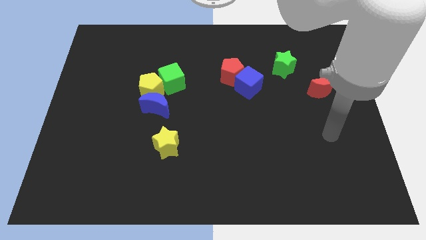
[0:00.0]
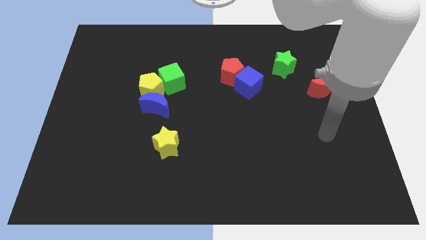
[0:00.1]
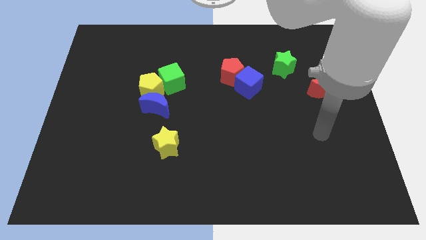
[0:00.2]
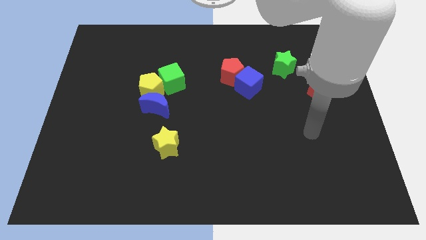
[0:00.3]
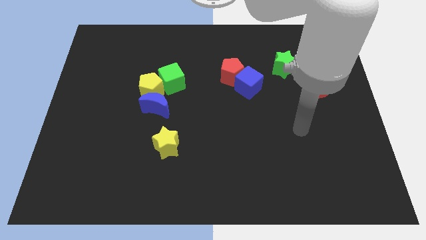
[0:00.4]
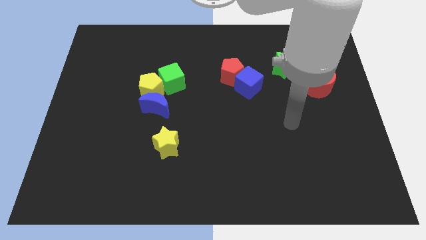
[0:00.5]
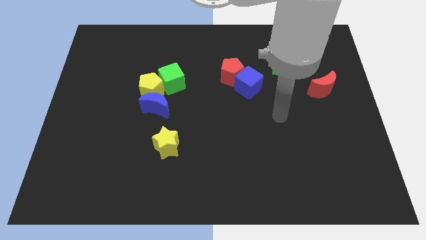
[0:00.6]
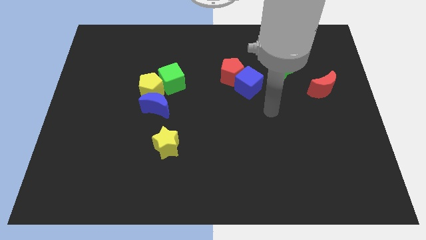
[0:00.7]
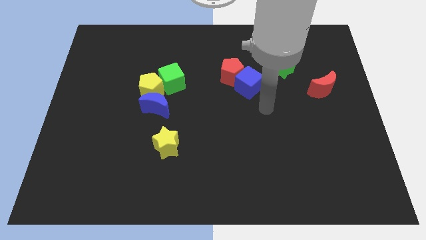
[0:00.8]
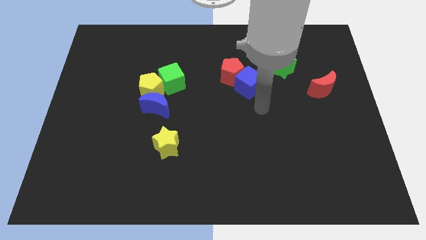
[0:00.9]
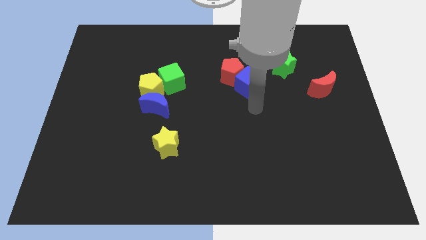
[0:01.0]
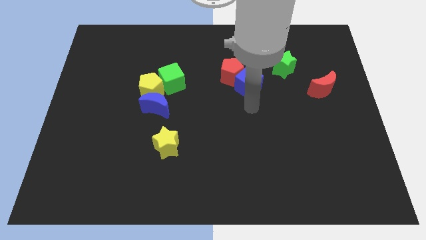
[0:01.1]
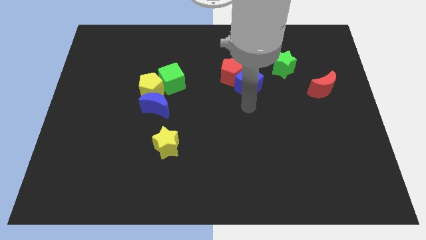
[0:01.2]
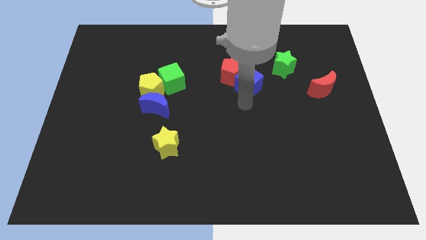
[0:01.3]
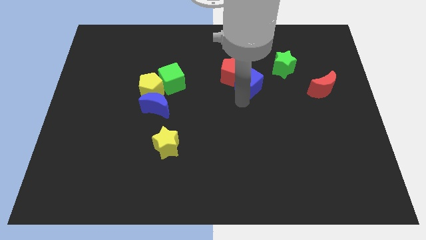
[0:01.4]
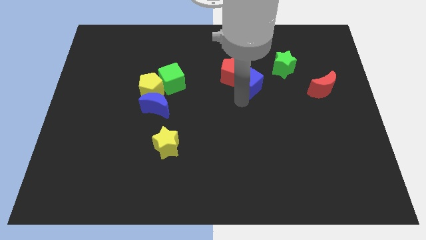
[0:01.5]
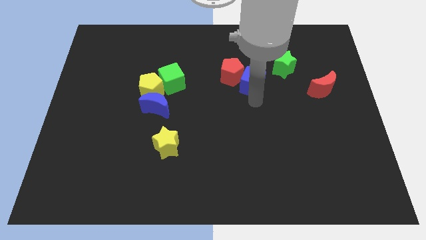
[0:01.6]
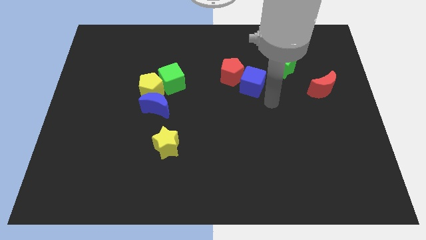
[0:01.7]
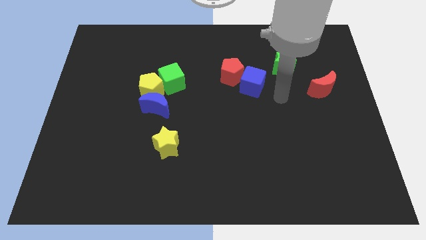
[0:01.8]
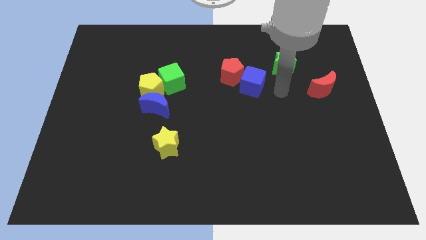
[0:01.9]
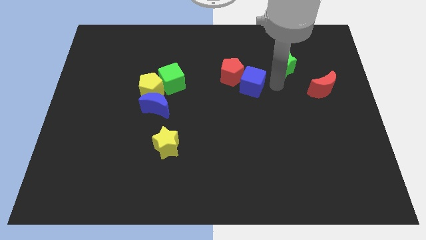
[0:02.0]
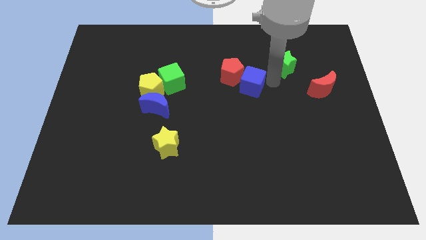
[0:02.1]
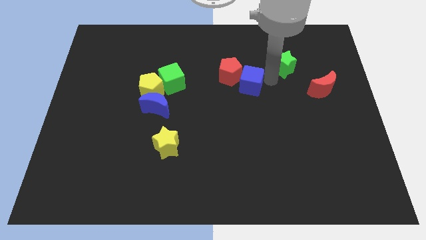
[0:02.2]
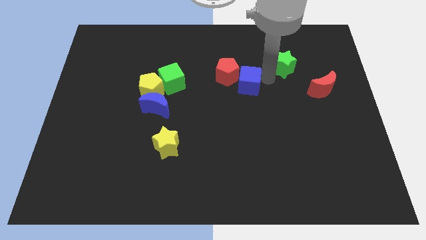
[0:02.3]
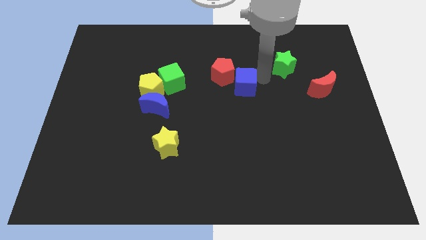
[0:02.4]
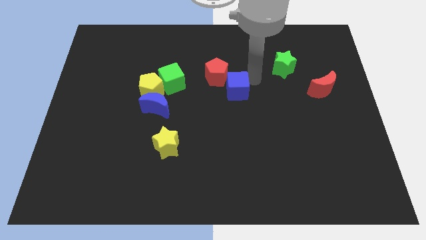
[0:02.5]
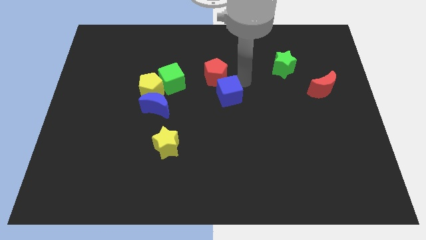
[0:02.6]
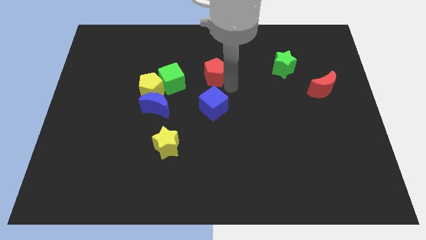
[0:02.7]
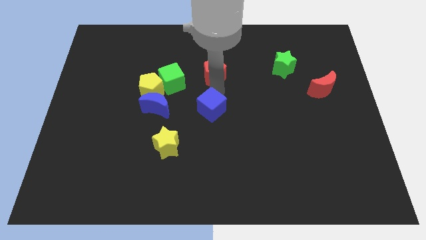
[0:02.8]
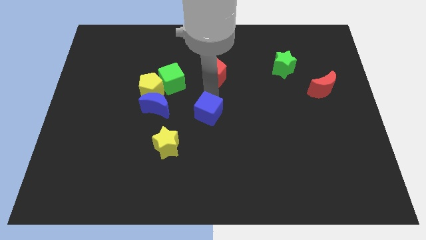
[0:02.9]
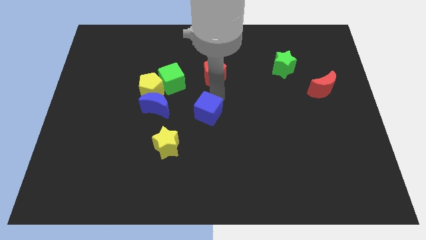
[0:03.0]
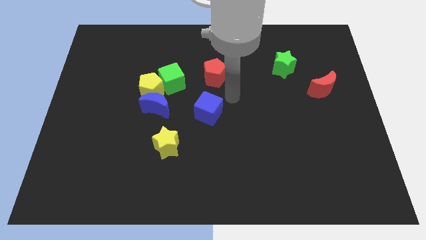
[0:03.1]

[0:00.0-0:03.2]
place the blue cube parallel to blue moon

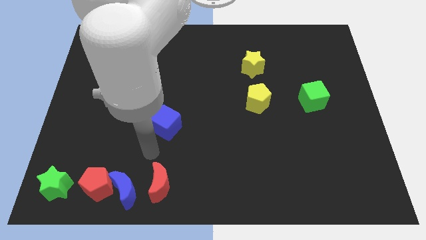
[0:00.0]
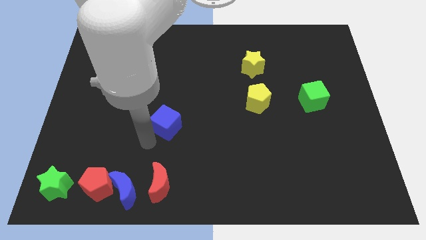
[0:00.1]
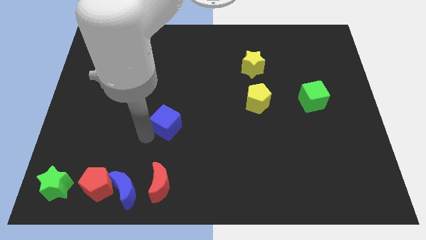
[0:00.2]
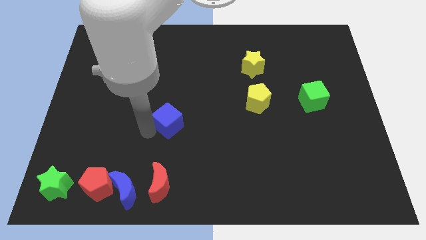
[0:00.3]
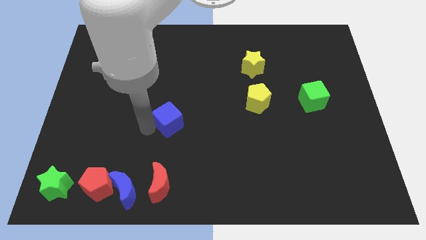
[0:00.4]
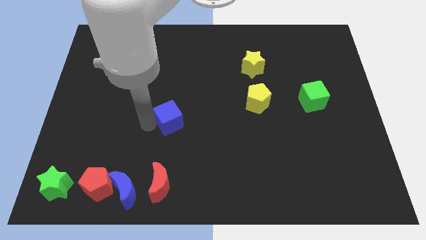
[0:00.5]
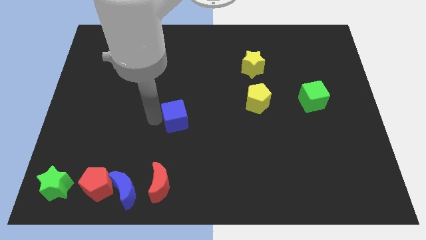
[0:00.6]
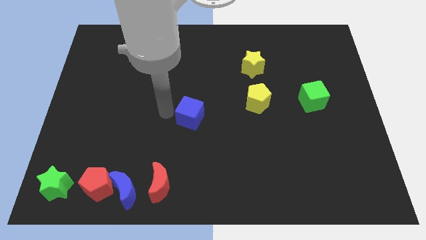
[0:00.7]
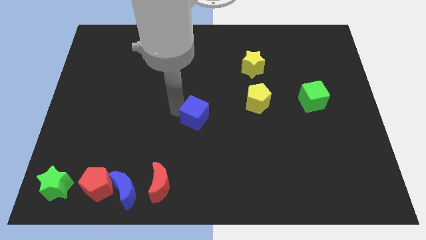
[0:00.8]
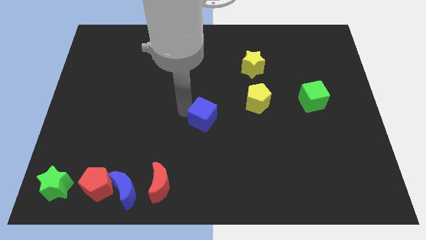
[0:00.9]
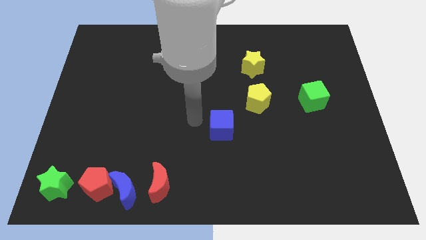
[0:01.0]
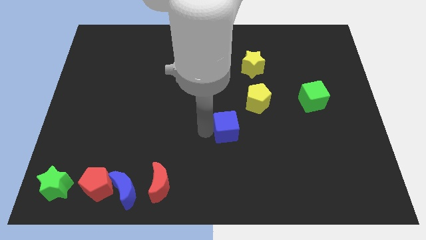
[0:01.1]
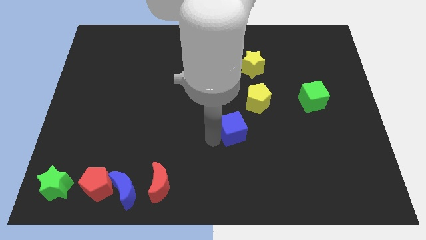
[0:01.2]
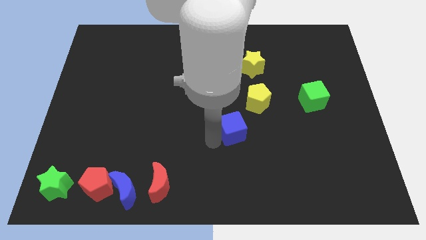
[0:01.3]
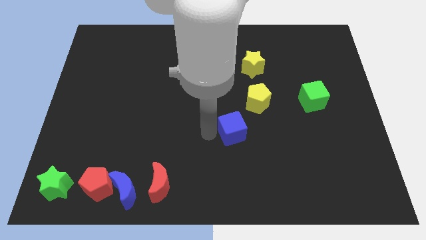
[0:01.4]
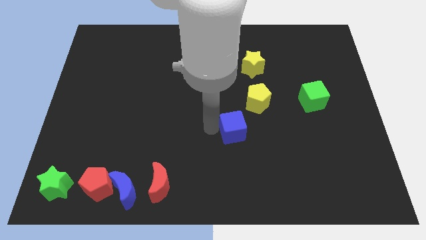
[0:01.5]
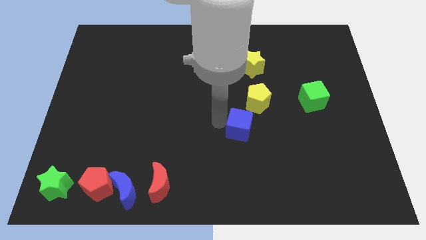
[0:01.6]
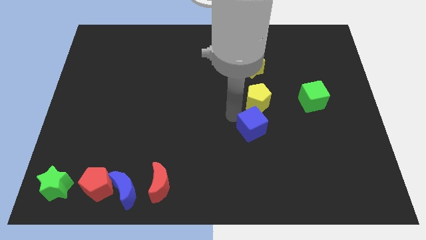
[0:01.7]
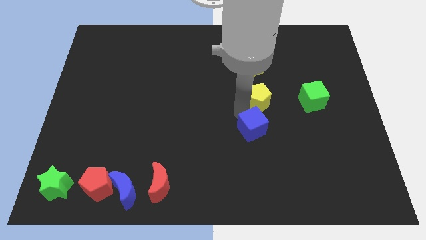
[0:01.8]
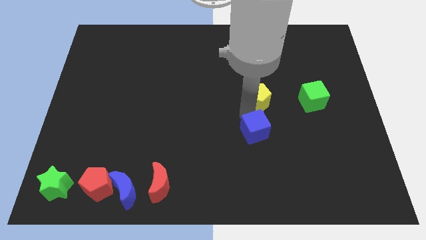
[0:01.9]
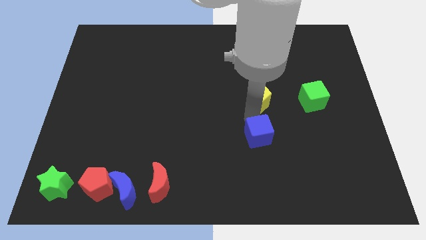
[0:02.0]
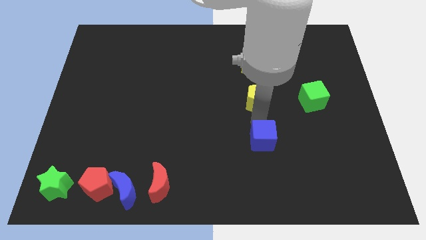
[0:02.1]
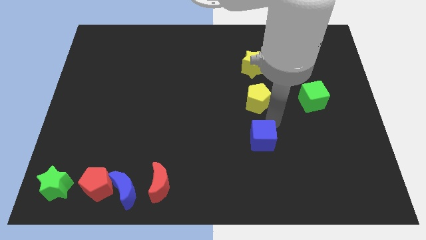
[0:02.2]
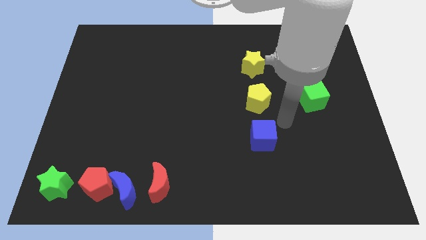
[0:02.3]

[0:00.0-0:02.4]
push the blue cube to the bottom of the yellow pentagon

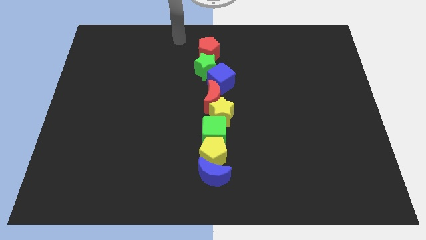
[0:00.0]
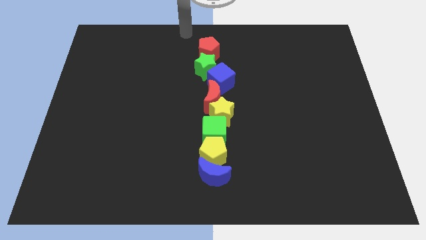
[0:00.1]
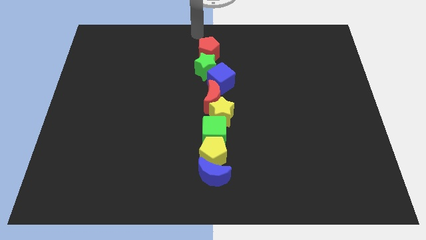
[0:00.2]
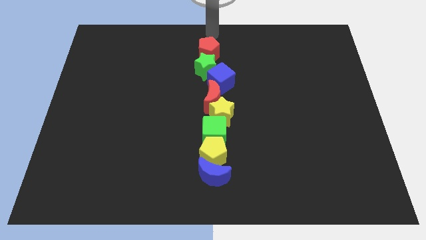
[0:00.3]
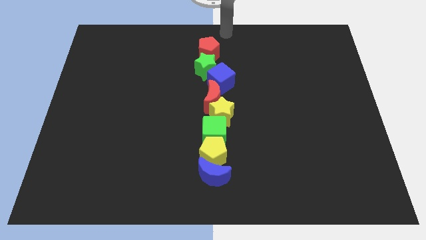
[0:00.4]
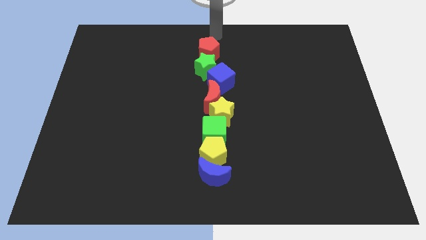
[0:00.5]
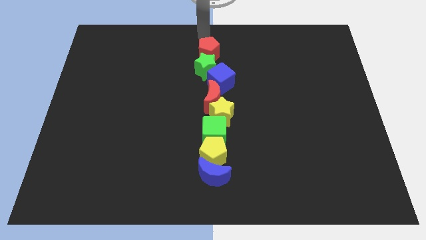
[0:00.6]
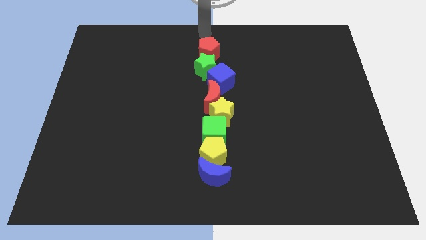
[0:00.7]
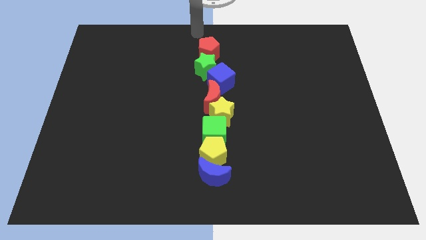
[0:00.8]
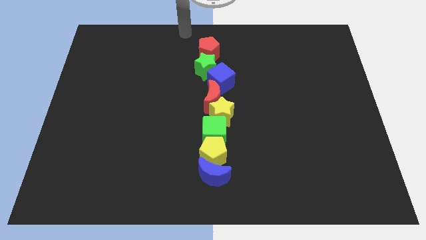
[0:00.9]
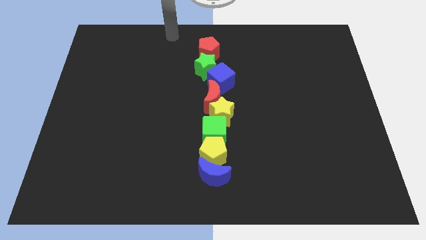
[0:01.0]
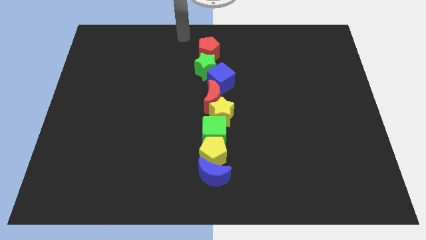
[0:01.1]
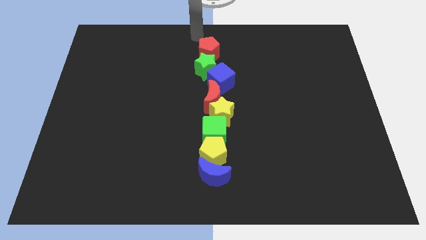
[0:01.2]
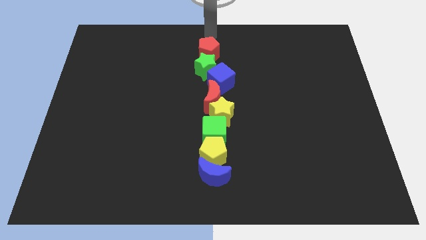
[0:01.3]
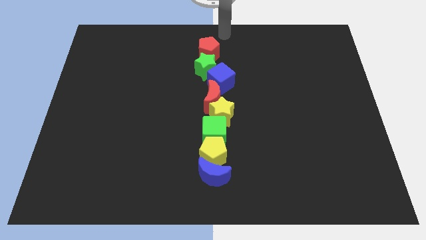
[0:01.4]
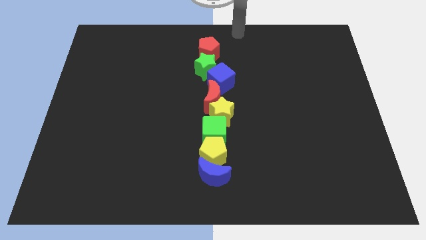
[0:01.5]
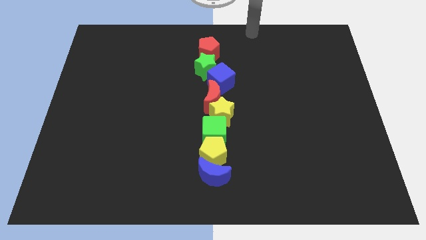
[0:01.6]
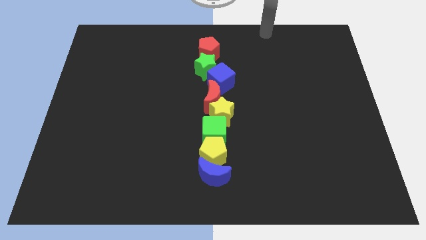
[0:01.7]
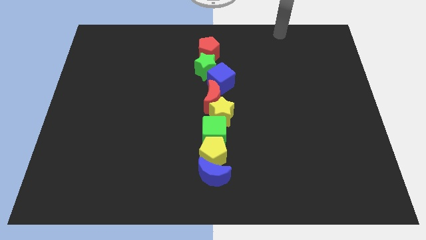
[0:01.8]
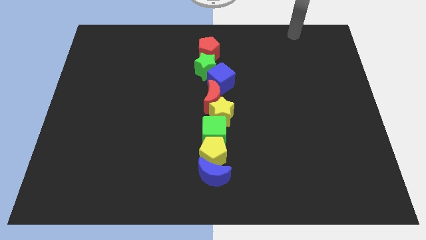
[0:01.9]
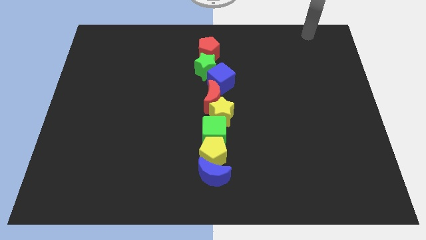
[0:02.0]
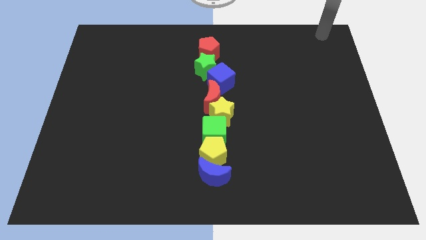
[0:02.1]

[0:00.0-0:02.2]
move your hand away from the red pentagon

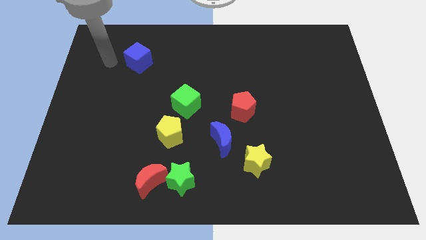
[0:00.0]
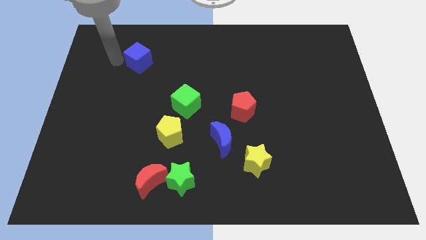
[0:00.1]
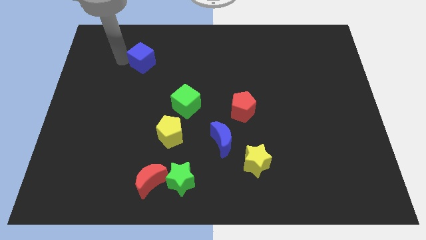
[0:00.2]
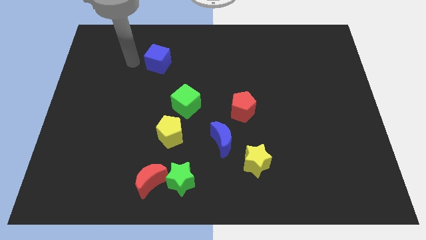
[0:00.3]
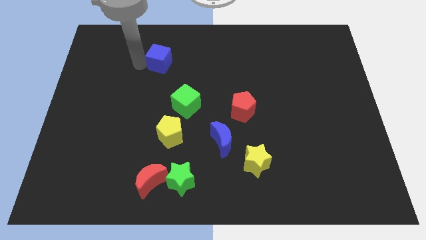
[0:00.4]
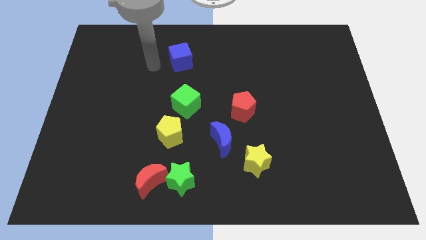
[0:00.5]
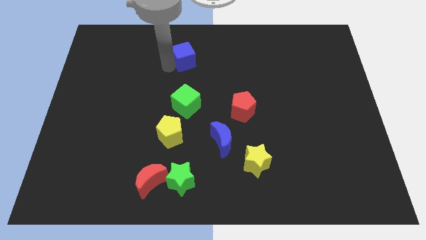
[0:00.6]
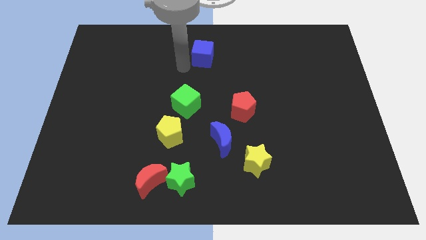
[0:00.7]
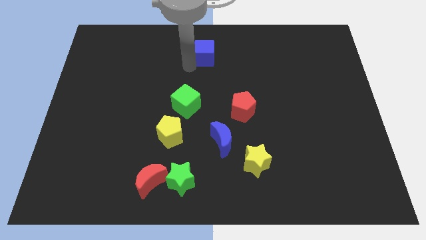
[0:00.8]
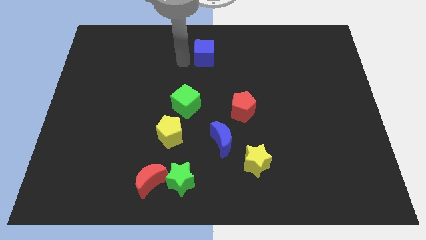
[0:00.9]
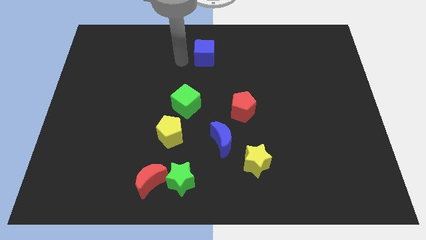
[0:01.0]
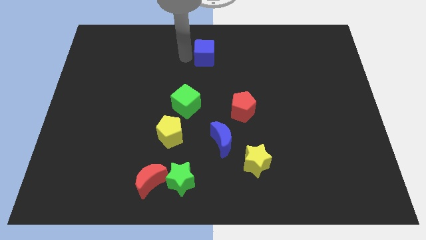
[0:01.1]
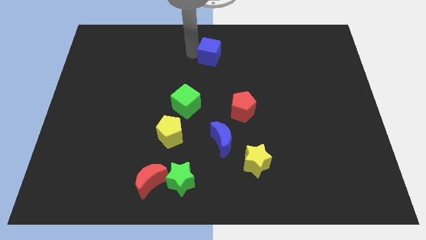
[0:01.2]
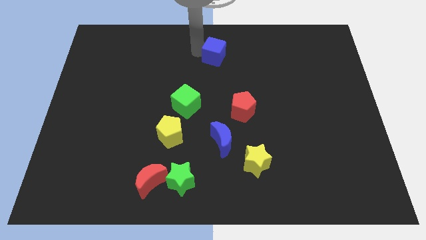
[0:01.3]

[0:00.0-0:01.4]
place the blue cube to the top center of the board
